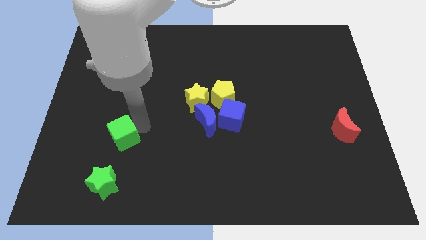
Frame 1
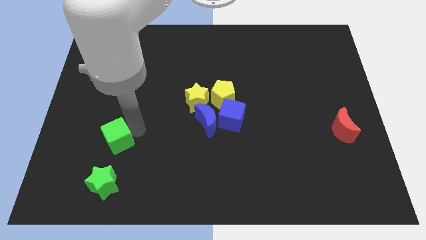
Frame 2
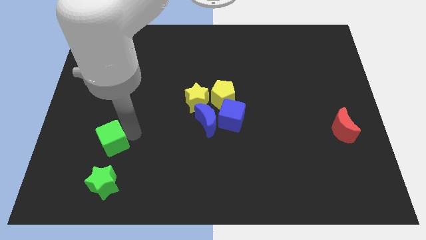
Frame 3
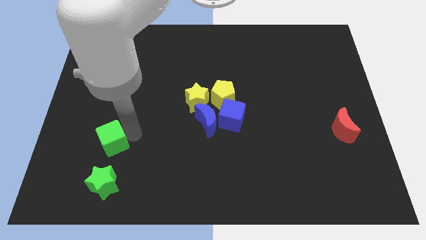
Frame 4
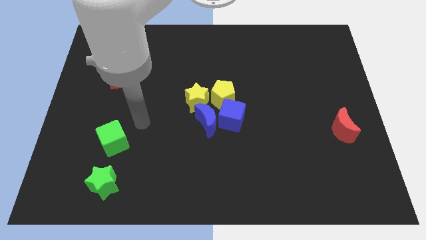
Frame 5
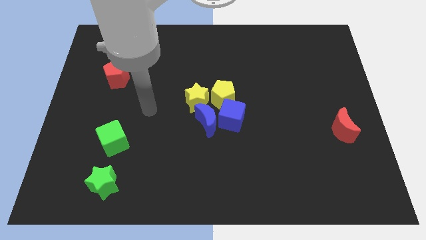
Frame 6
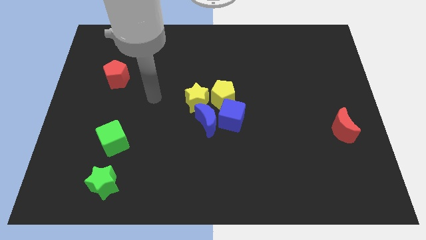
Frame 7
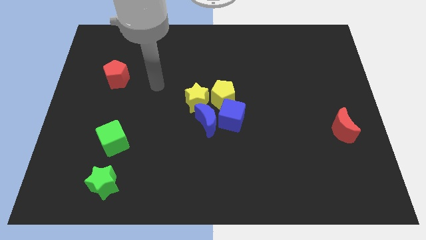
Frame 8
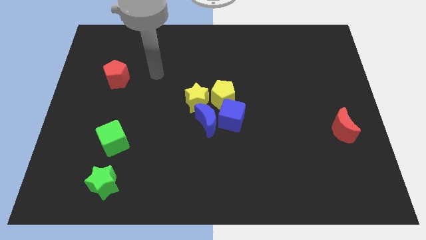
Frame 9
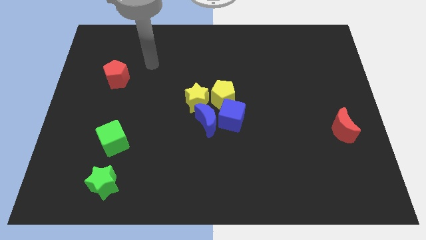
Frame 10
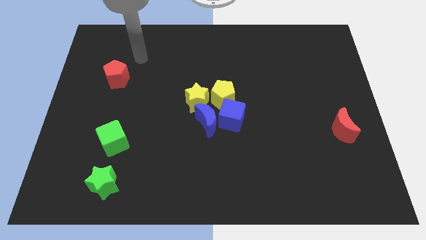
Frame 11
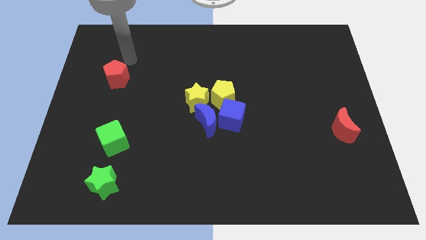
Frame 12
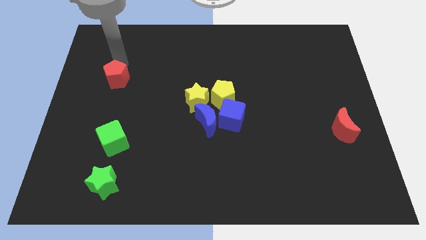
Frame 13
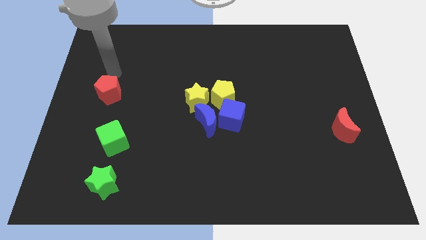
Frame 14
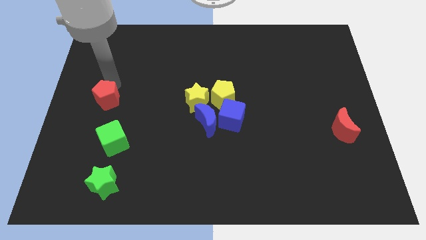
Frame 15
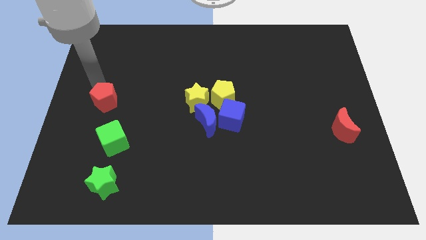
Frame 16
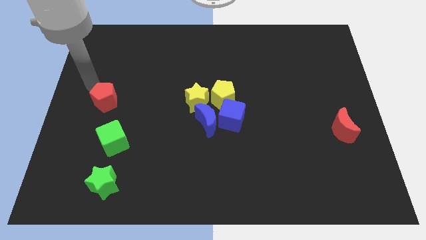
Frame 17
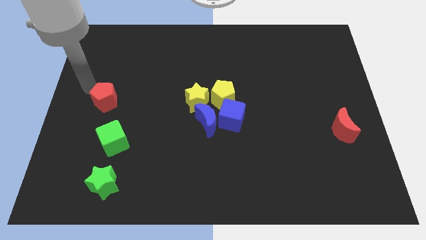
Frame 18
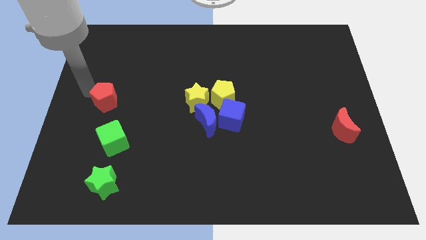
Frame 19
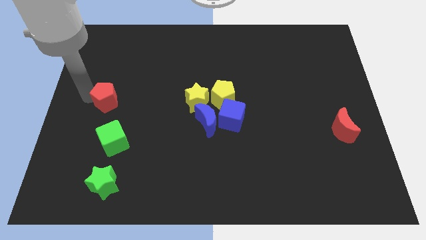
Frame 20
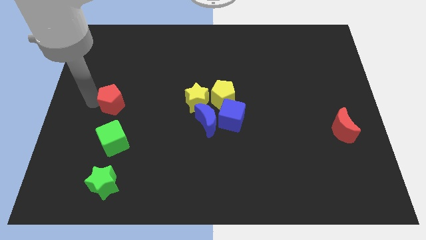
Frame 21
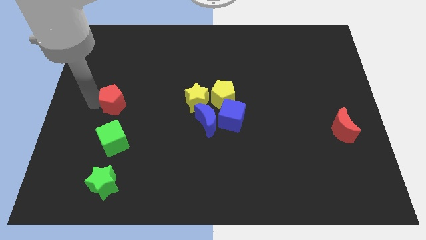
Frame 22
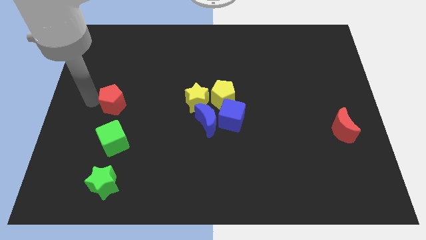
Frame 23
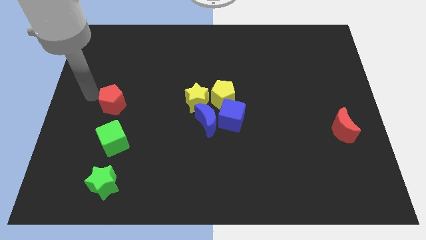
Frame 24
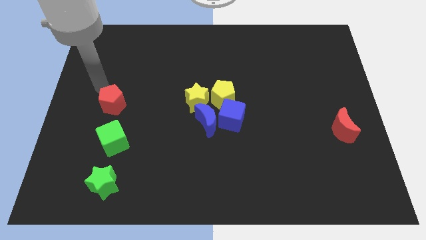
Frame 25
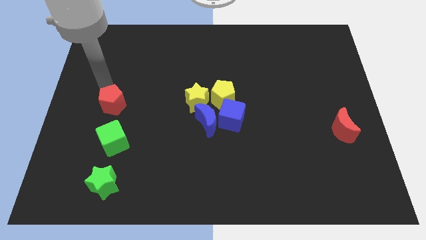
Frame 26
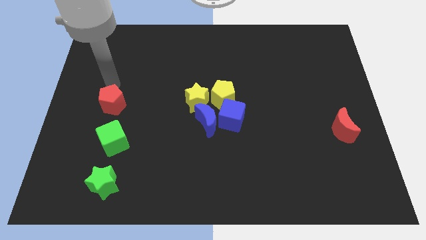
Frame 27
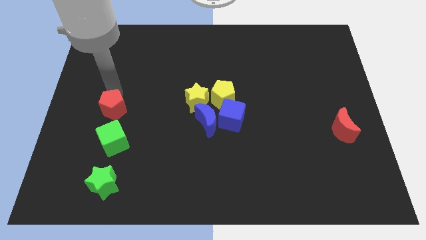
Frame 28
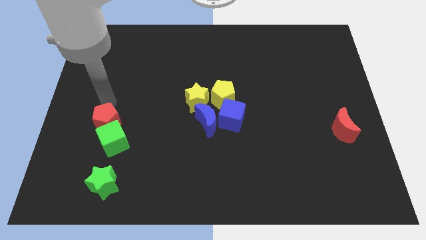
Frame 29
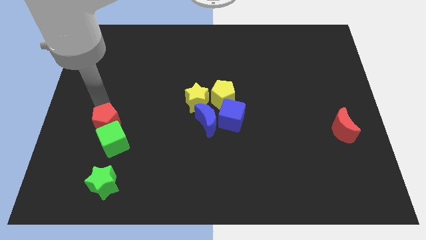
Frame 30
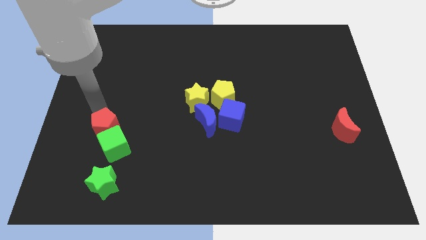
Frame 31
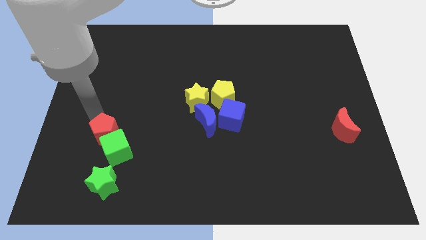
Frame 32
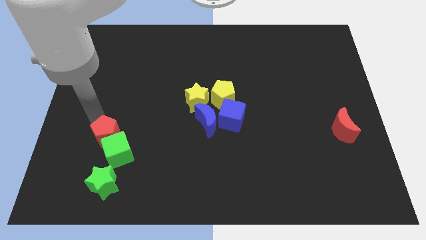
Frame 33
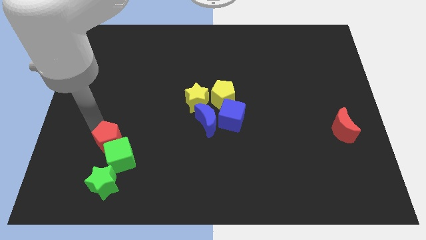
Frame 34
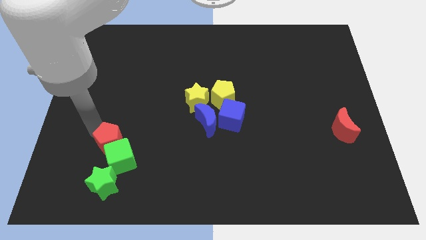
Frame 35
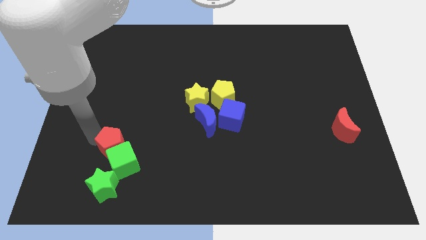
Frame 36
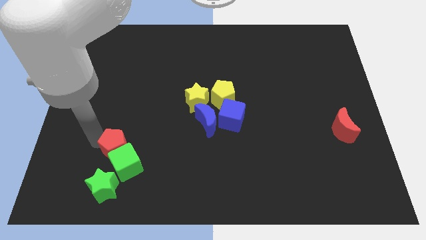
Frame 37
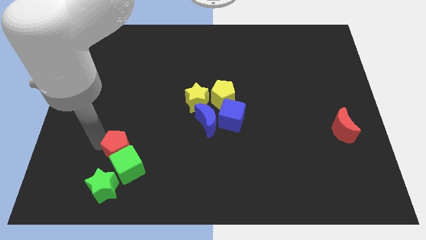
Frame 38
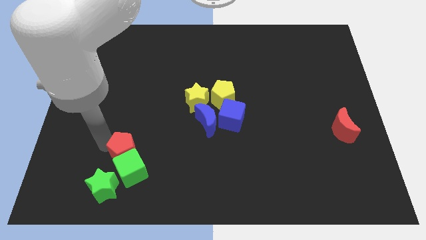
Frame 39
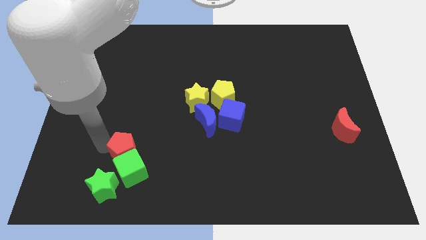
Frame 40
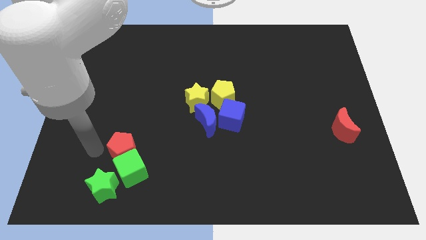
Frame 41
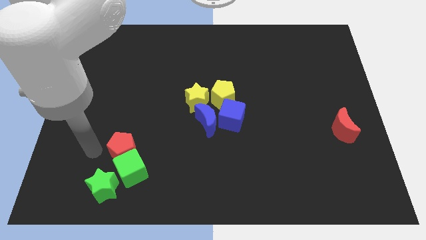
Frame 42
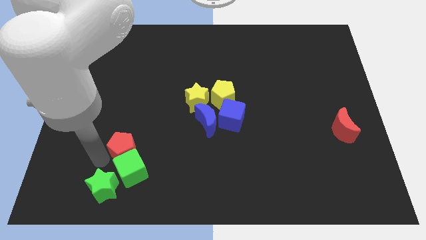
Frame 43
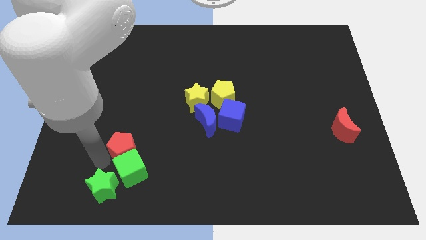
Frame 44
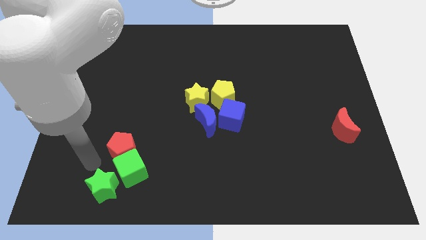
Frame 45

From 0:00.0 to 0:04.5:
move the red pentagon into the green cube

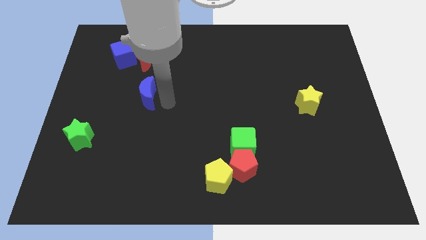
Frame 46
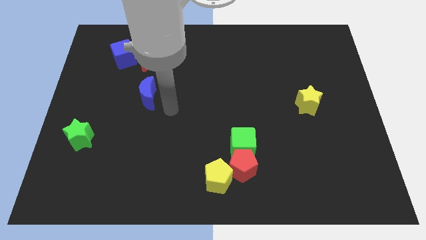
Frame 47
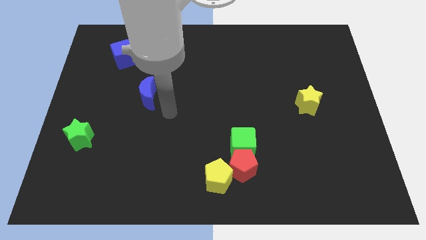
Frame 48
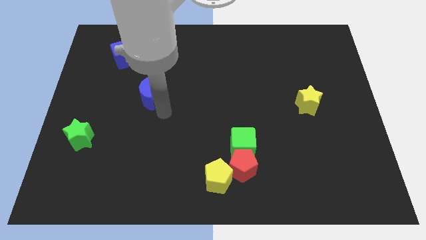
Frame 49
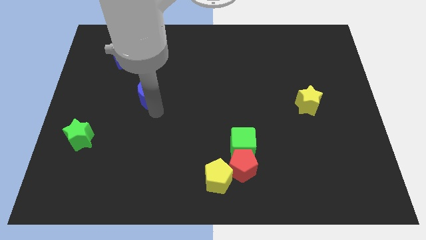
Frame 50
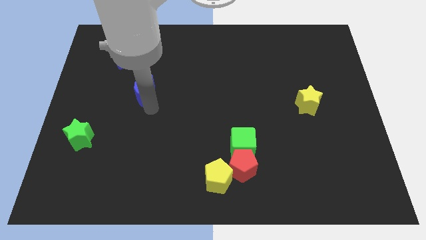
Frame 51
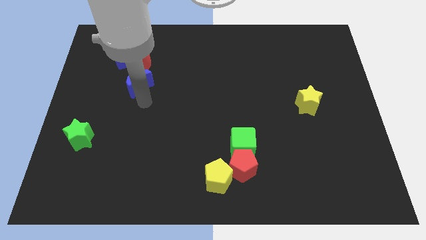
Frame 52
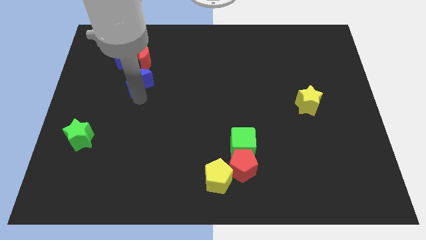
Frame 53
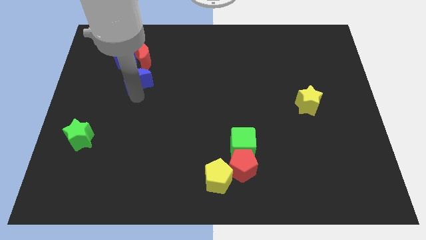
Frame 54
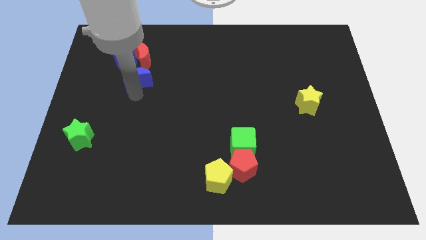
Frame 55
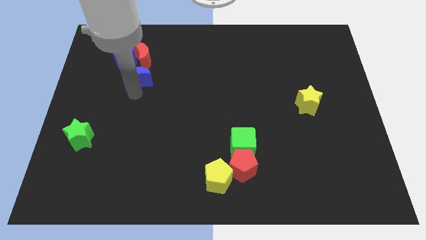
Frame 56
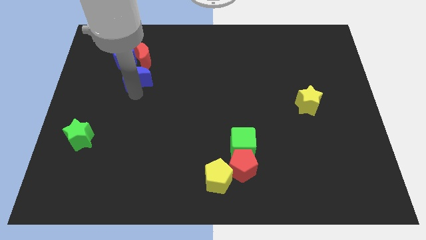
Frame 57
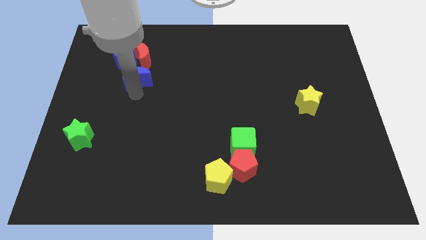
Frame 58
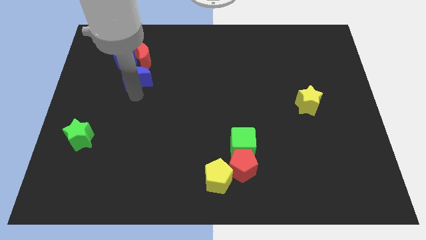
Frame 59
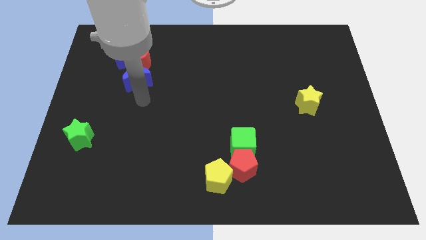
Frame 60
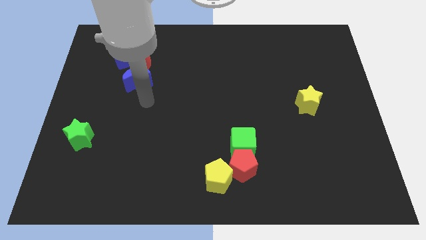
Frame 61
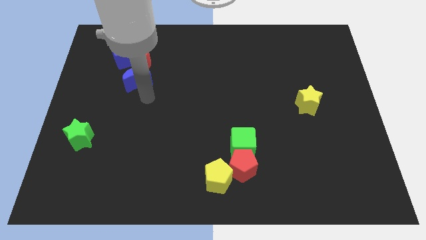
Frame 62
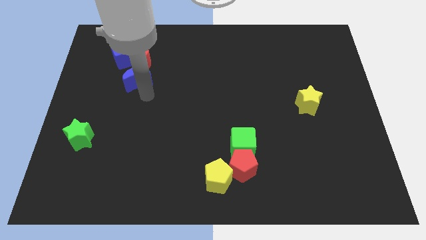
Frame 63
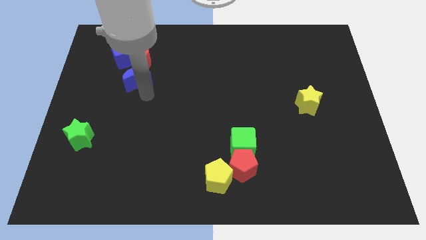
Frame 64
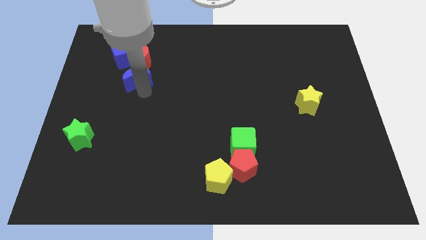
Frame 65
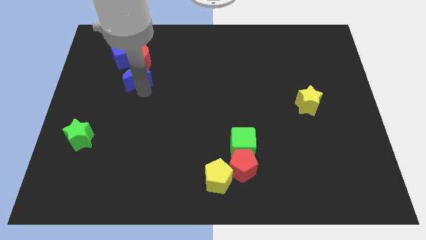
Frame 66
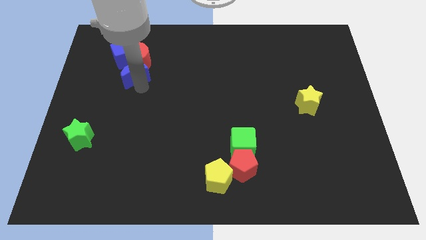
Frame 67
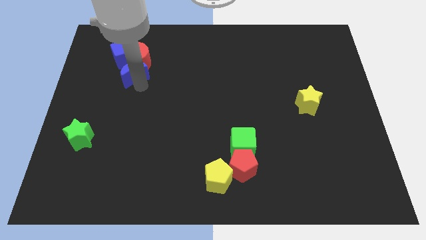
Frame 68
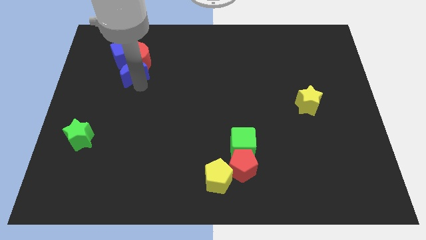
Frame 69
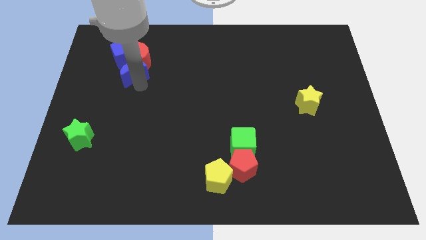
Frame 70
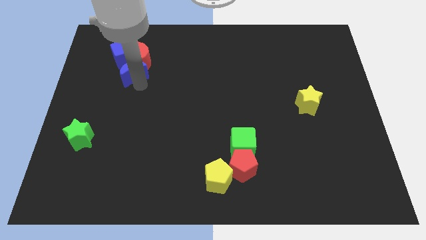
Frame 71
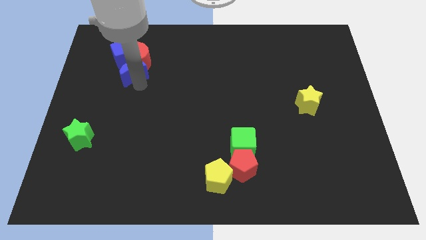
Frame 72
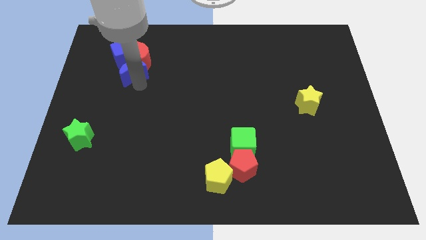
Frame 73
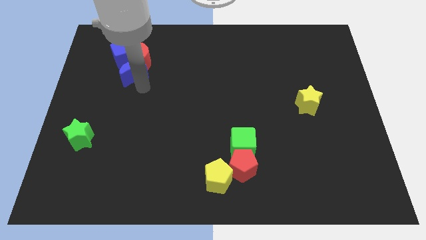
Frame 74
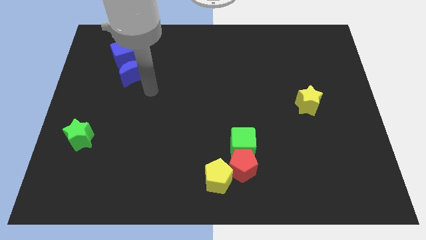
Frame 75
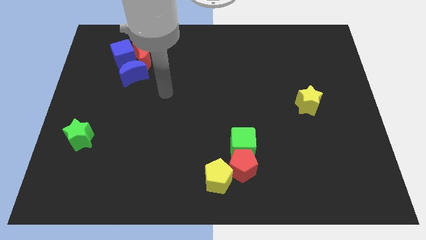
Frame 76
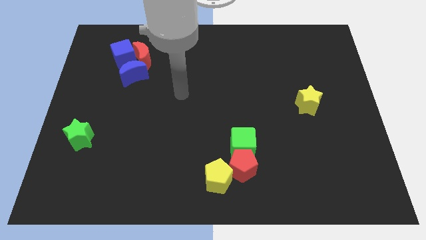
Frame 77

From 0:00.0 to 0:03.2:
place the blue moon at the bottom of blue cube

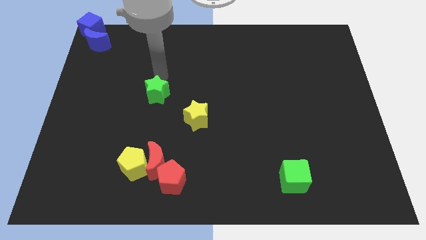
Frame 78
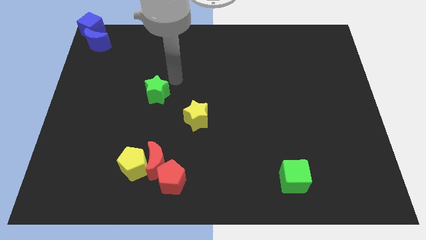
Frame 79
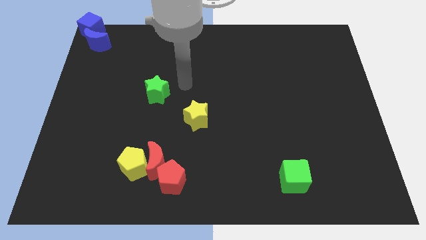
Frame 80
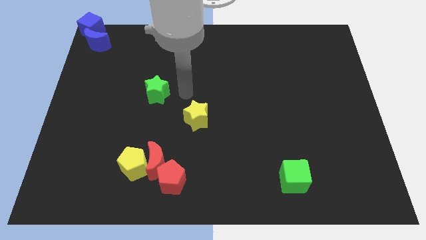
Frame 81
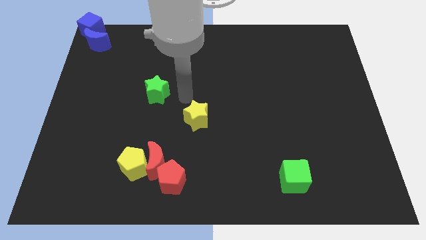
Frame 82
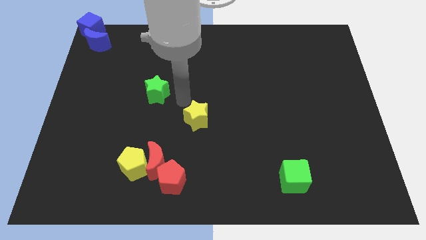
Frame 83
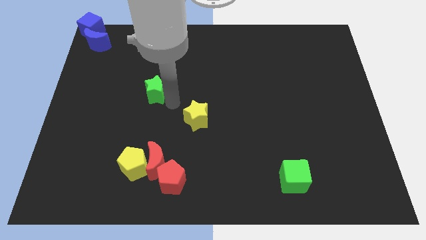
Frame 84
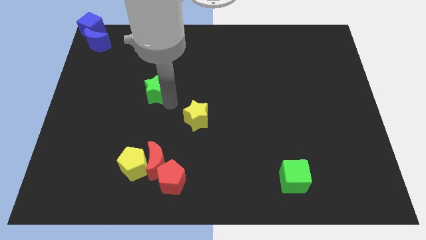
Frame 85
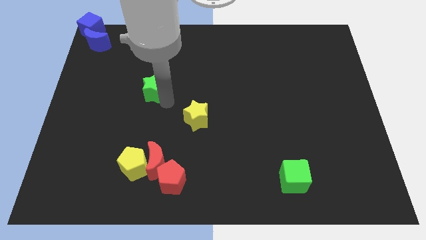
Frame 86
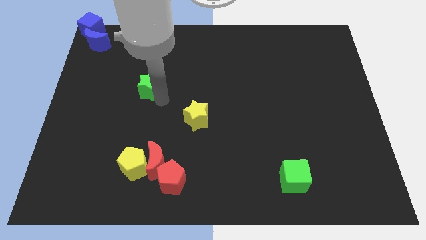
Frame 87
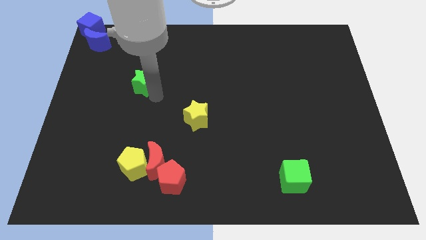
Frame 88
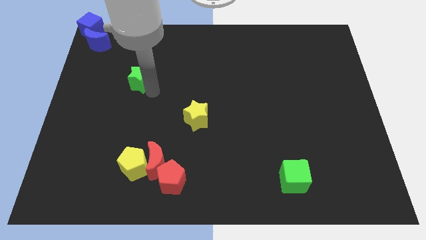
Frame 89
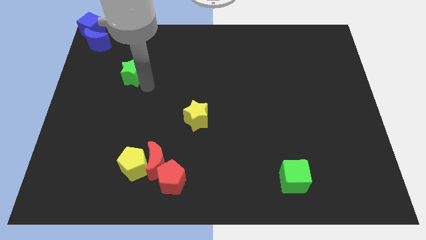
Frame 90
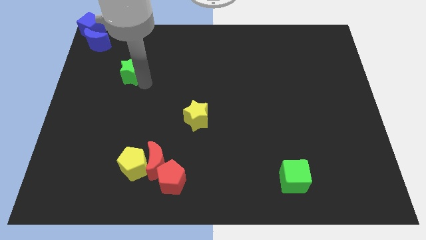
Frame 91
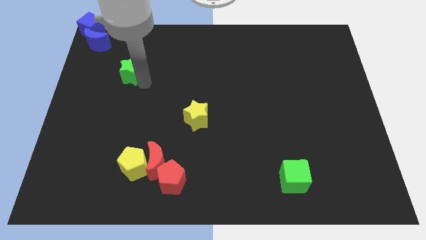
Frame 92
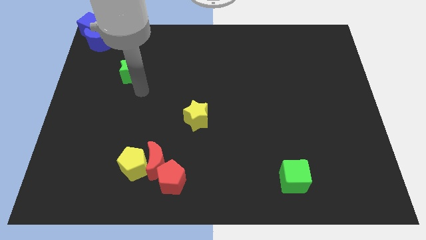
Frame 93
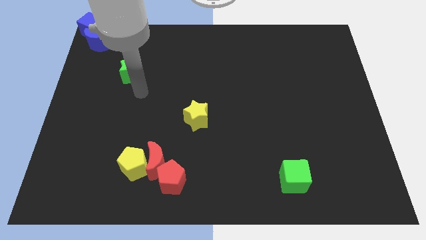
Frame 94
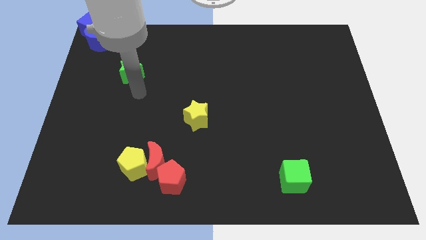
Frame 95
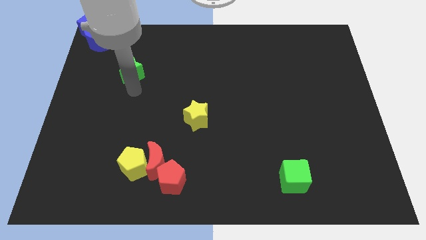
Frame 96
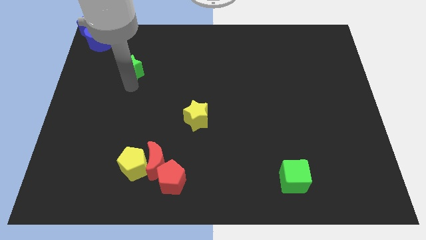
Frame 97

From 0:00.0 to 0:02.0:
move the green star closer to the blue moon
